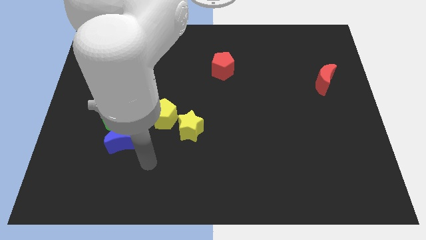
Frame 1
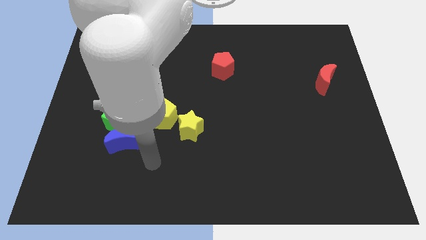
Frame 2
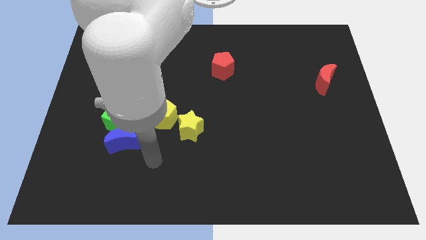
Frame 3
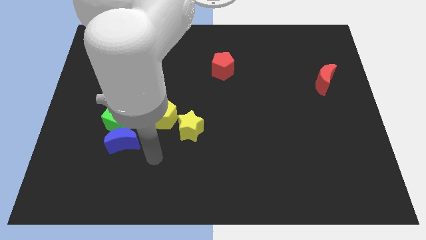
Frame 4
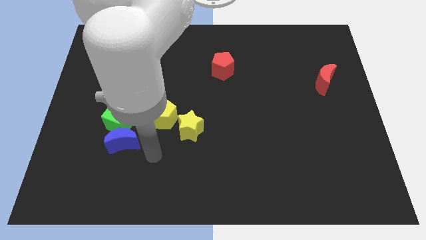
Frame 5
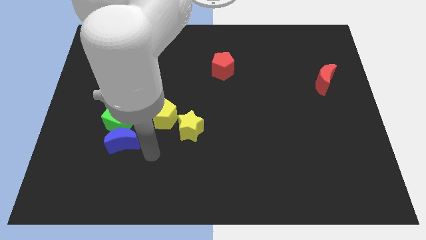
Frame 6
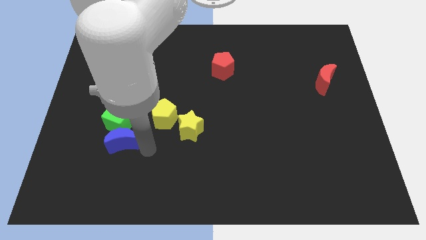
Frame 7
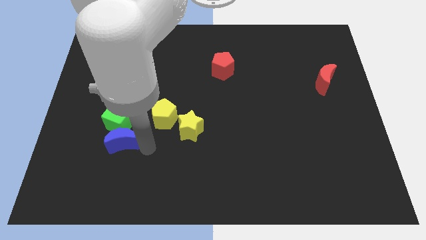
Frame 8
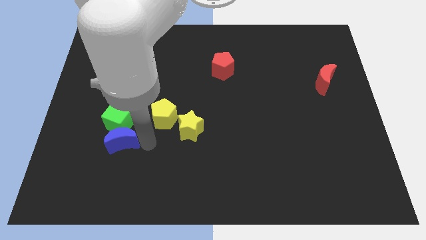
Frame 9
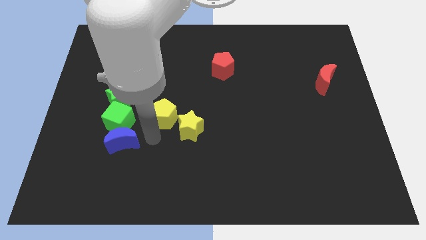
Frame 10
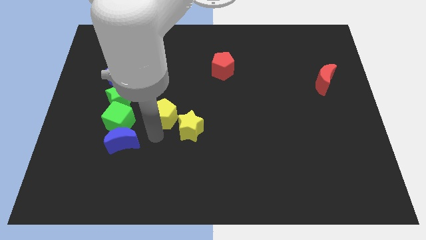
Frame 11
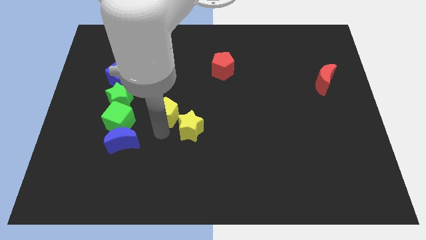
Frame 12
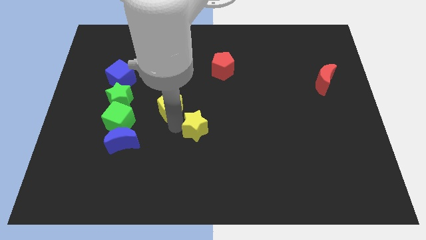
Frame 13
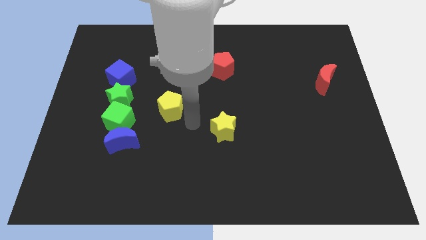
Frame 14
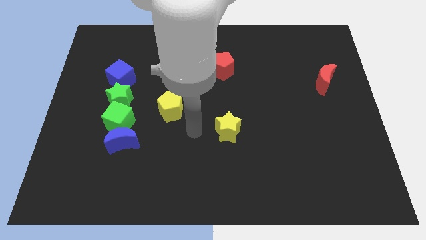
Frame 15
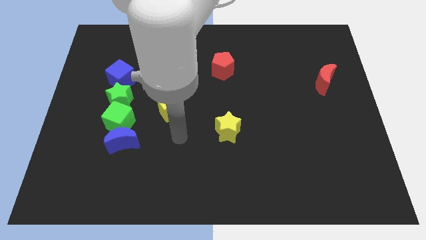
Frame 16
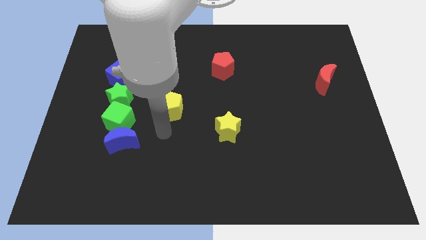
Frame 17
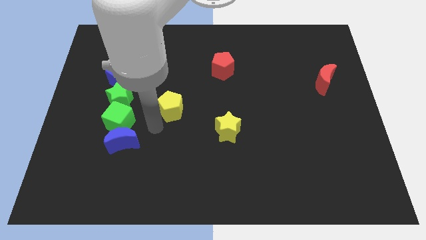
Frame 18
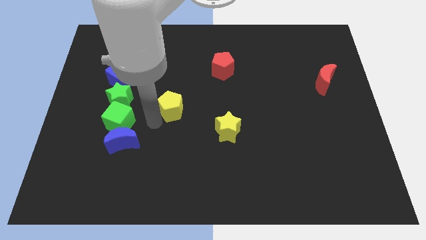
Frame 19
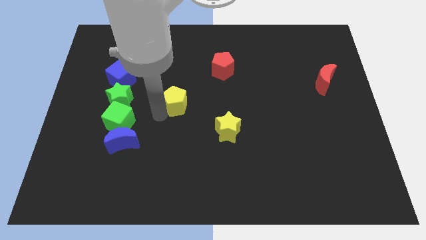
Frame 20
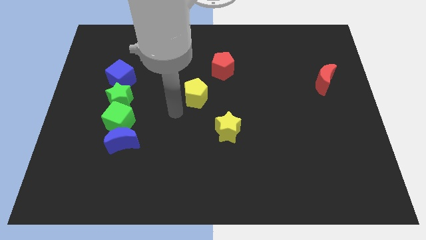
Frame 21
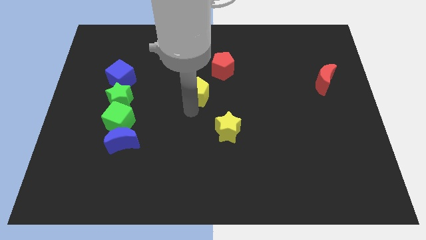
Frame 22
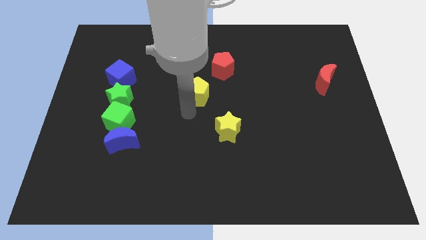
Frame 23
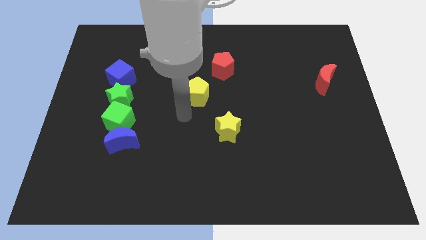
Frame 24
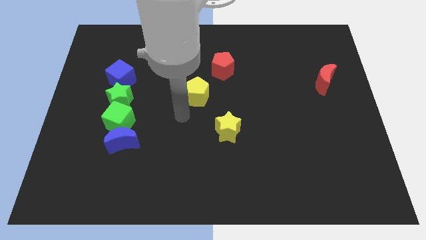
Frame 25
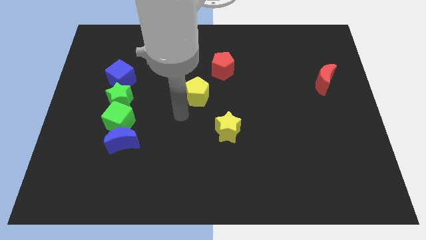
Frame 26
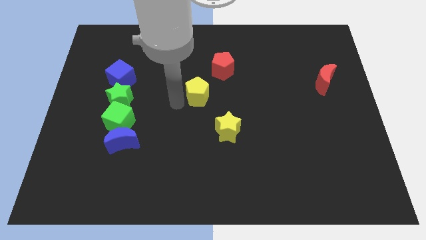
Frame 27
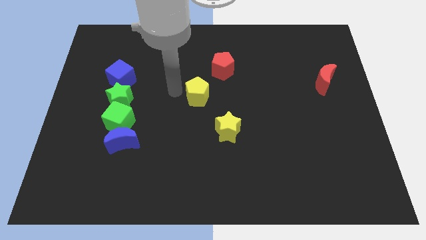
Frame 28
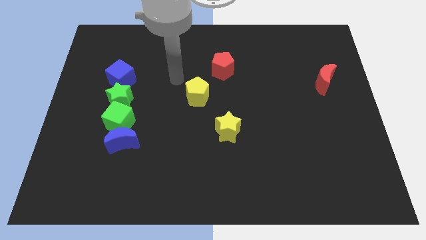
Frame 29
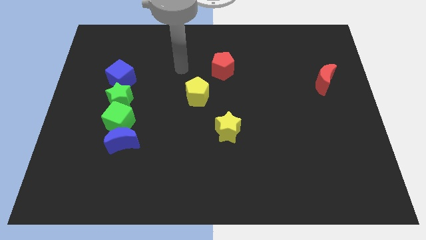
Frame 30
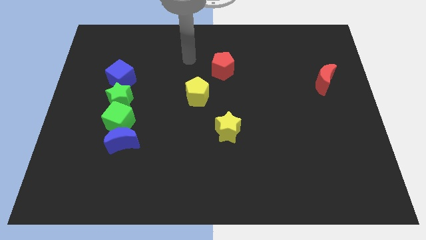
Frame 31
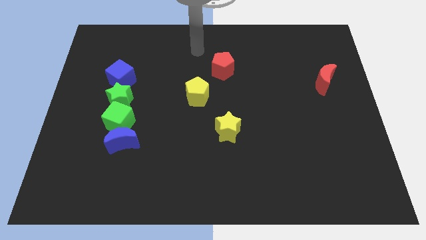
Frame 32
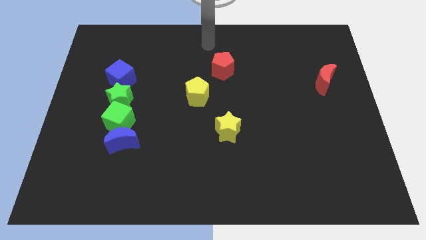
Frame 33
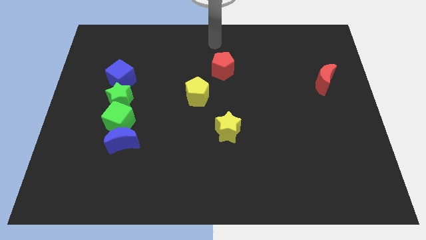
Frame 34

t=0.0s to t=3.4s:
place the yellow pentagon towards upward

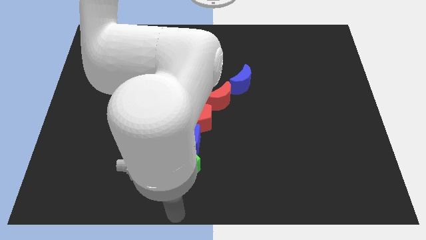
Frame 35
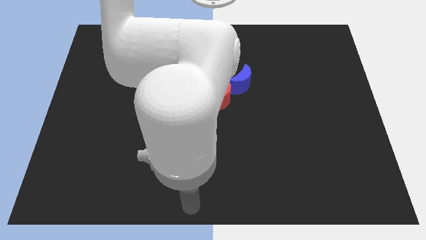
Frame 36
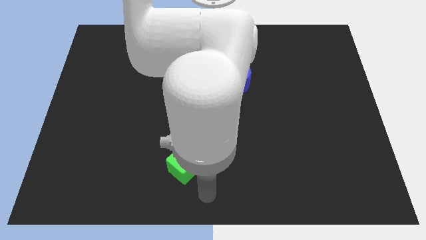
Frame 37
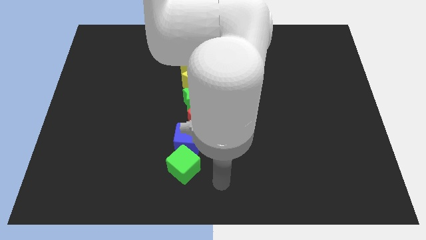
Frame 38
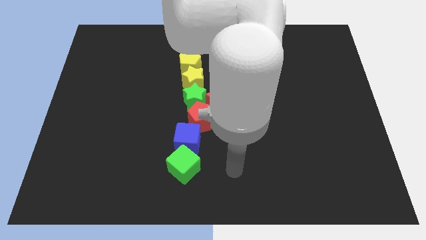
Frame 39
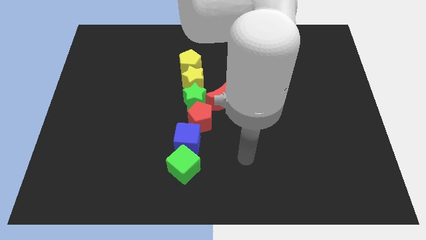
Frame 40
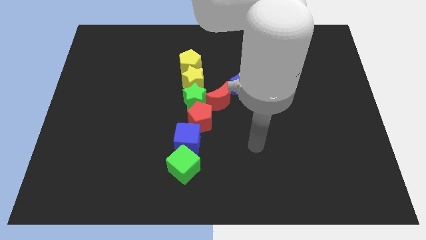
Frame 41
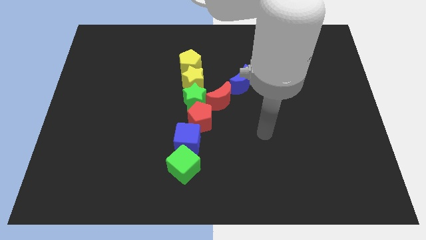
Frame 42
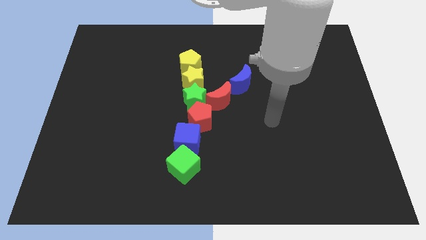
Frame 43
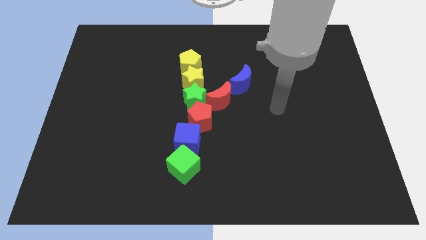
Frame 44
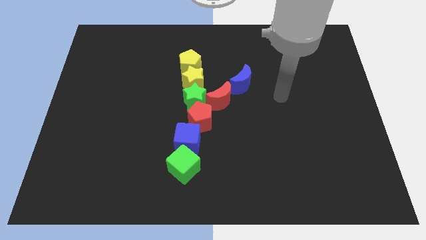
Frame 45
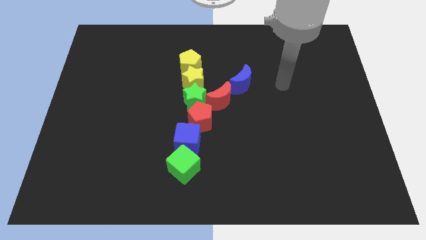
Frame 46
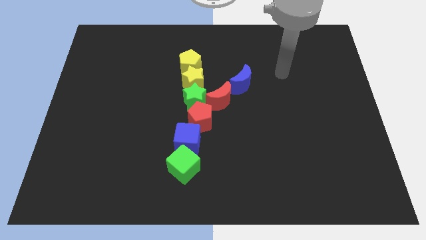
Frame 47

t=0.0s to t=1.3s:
go away from the green cube

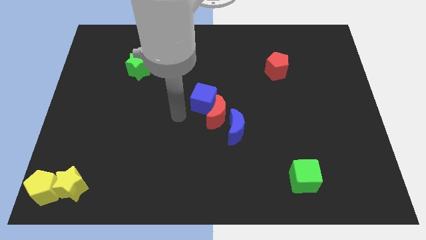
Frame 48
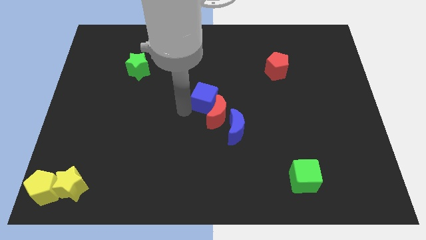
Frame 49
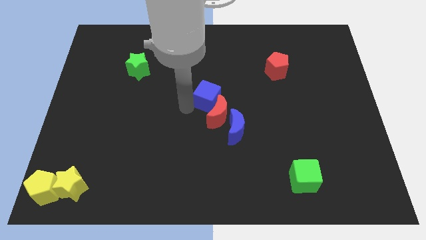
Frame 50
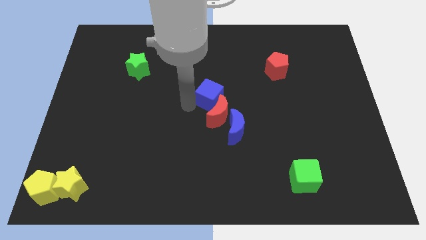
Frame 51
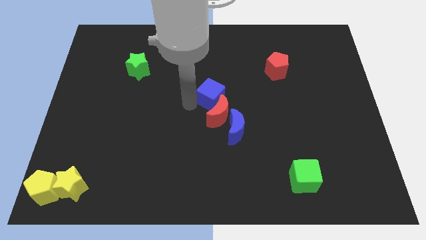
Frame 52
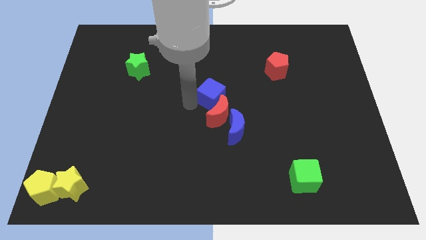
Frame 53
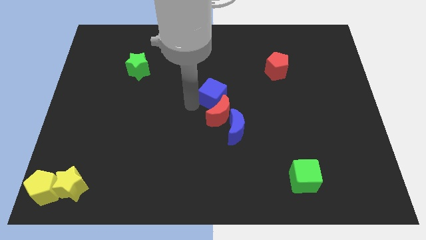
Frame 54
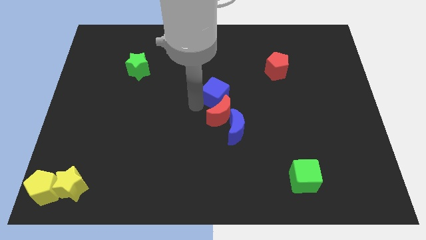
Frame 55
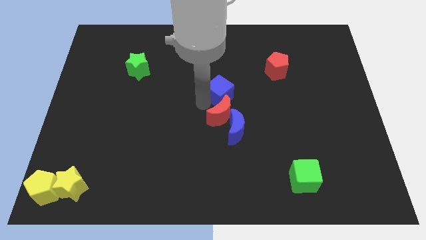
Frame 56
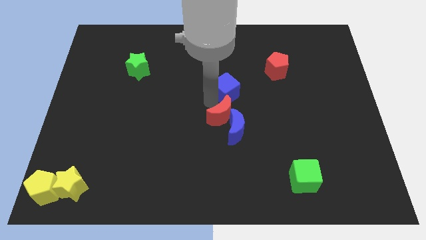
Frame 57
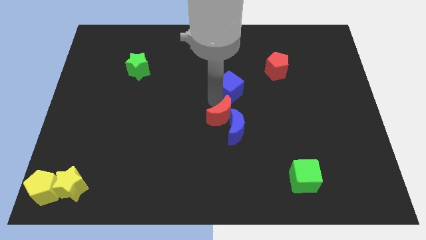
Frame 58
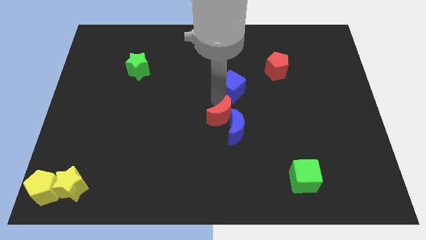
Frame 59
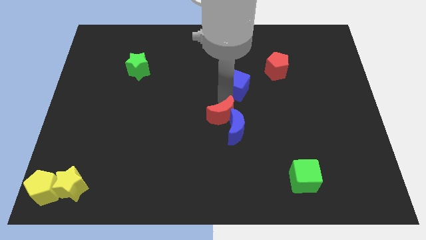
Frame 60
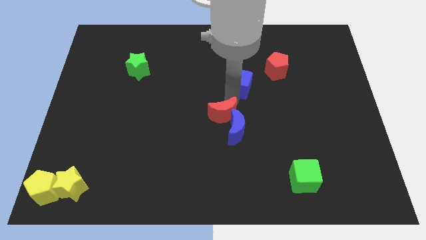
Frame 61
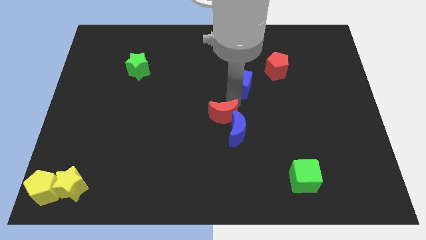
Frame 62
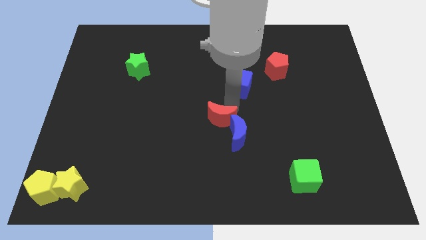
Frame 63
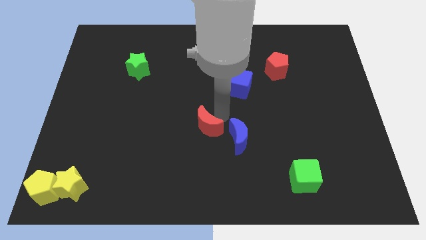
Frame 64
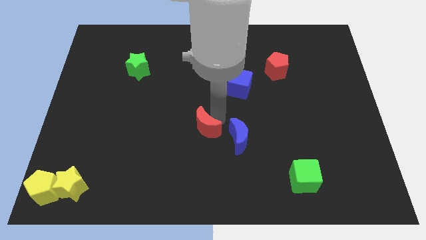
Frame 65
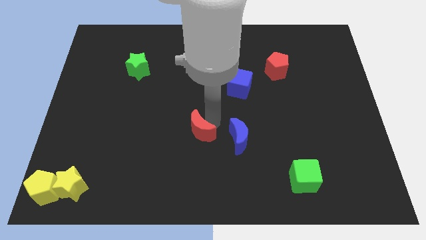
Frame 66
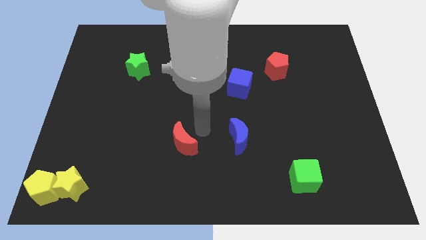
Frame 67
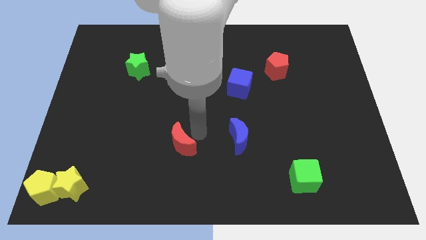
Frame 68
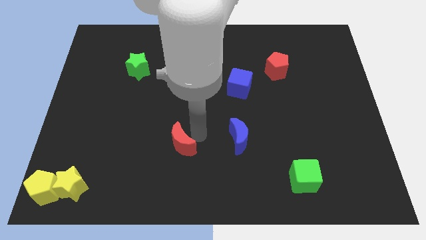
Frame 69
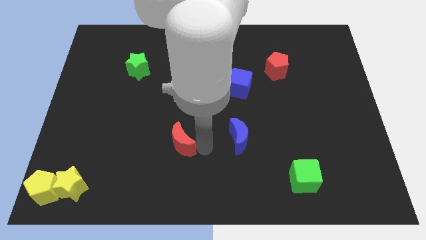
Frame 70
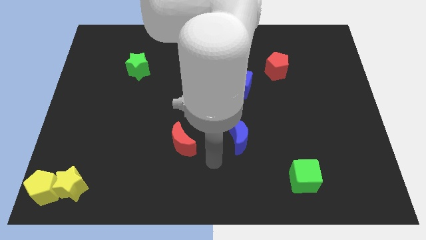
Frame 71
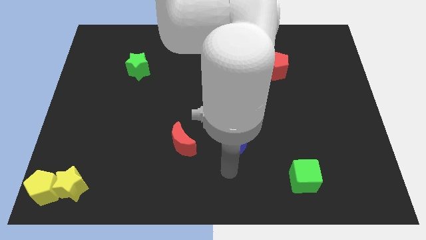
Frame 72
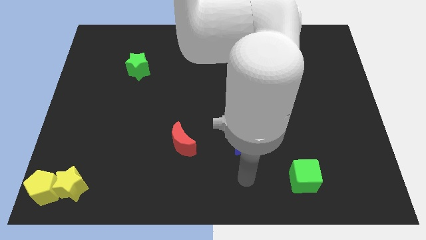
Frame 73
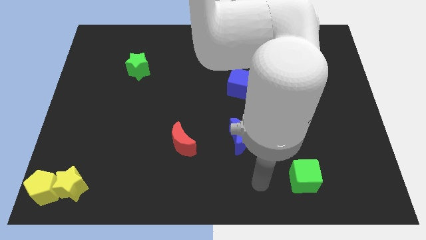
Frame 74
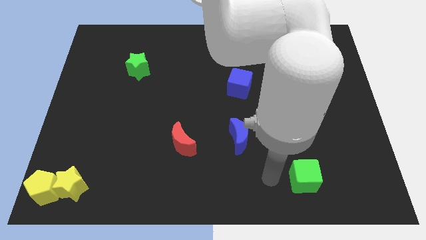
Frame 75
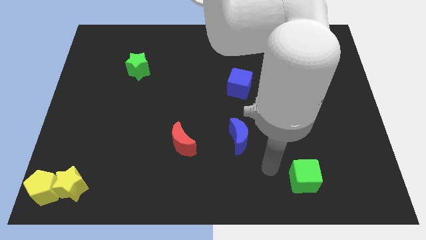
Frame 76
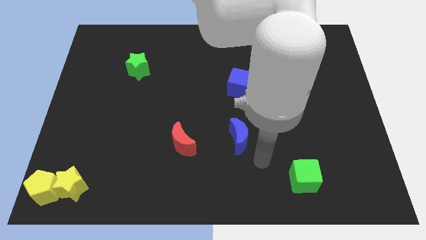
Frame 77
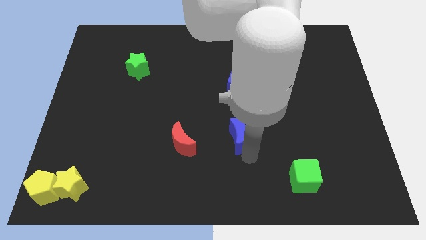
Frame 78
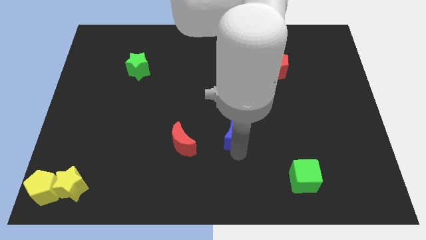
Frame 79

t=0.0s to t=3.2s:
move the red crescent to the left side of the board

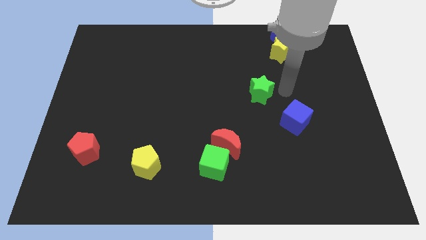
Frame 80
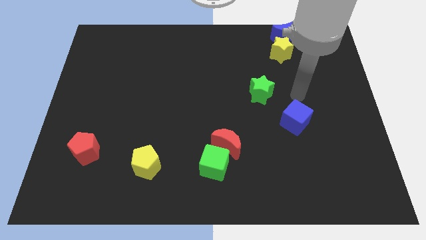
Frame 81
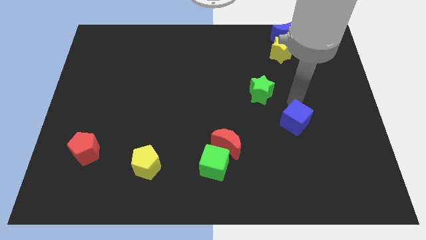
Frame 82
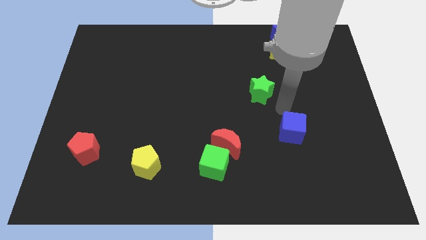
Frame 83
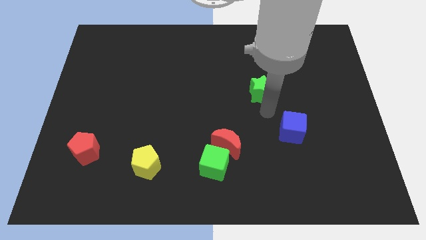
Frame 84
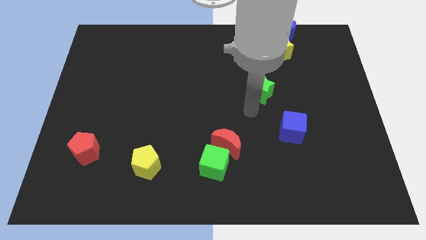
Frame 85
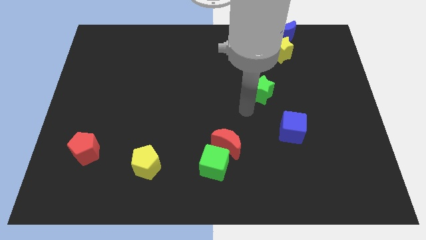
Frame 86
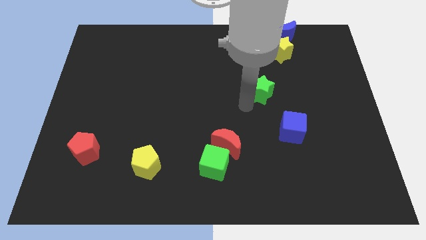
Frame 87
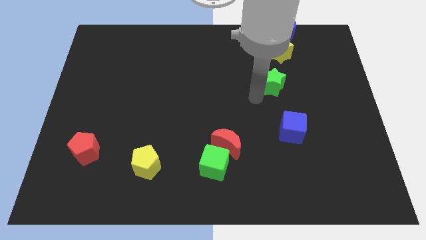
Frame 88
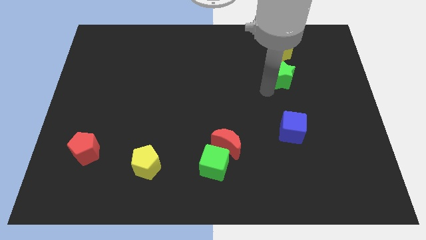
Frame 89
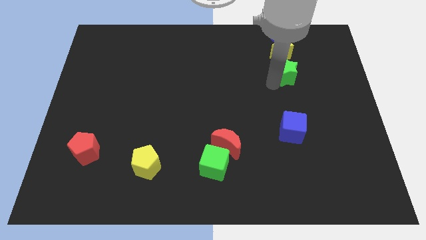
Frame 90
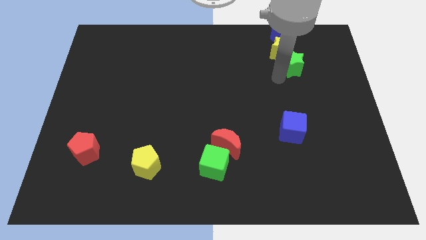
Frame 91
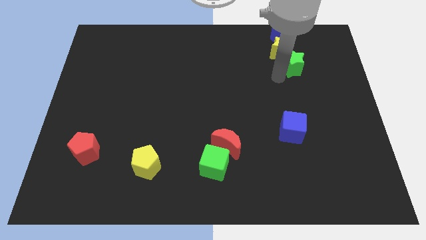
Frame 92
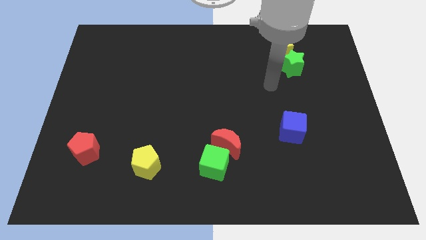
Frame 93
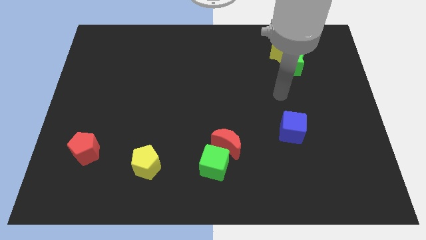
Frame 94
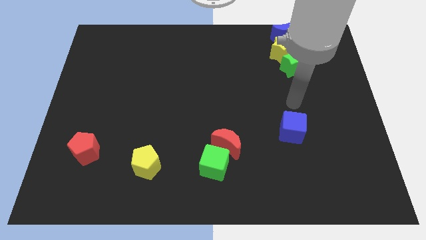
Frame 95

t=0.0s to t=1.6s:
move the green star near to the yellow star
